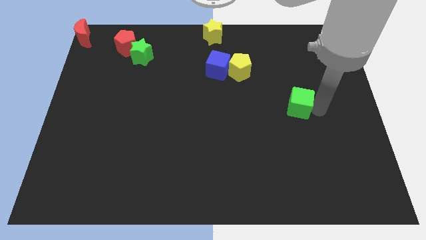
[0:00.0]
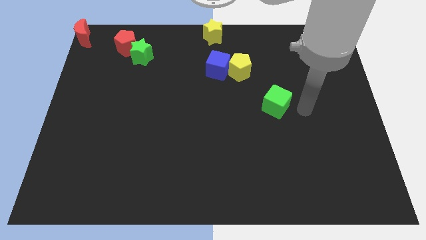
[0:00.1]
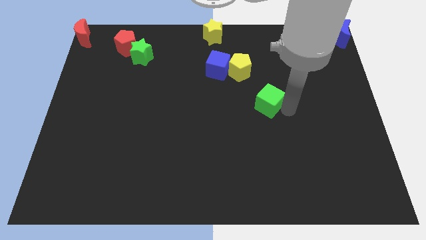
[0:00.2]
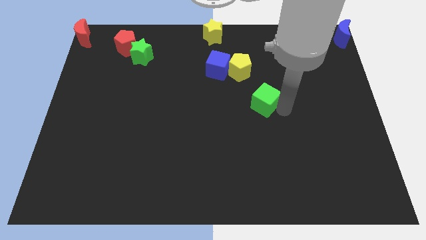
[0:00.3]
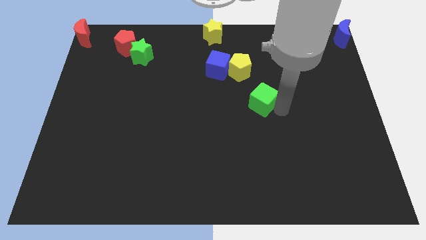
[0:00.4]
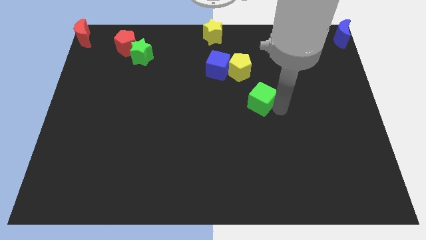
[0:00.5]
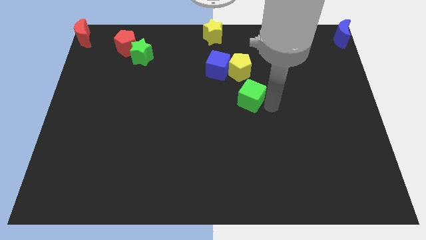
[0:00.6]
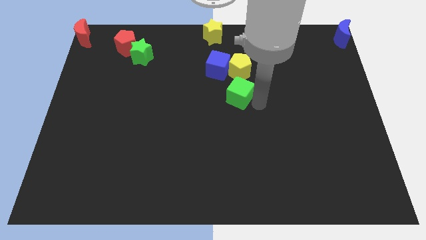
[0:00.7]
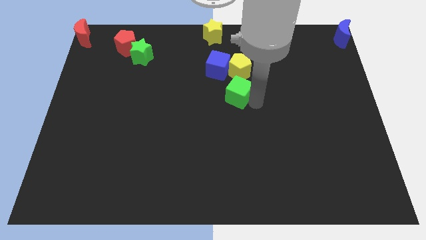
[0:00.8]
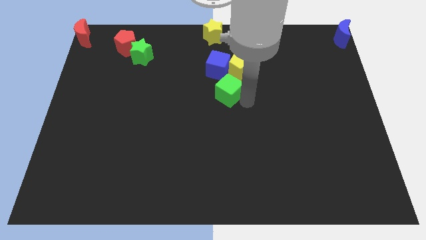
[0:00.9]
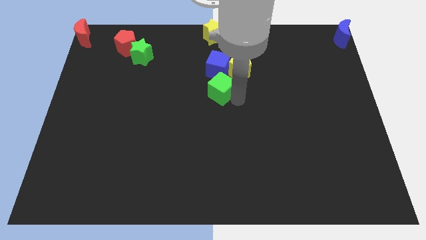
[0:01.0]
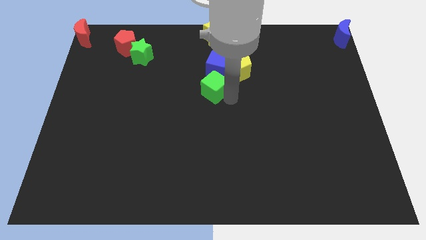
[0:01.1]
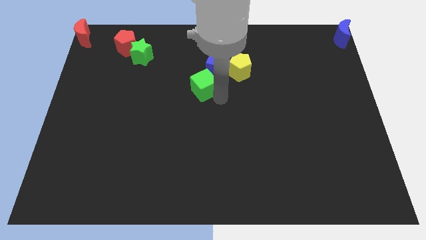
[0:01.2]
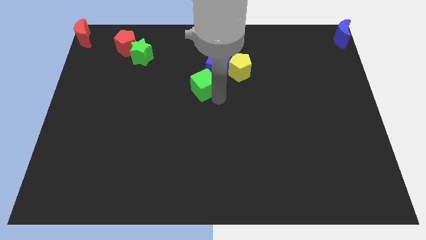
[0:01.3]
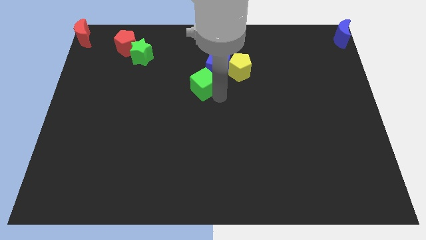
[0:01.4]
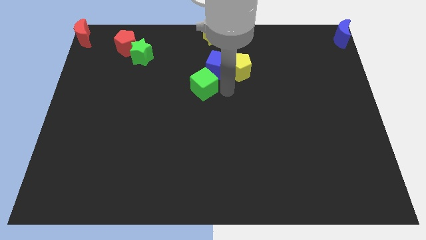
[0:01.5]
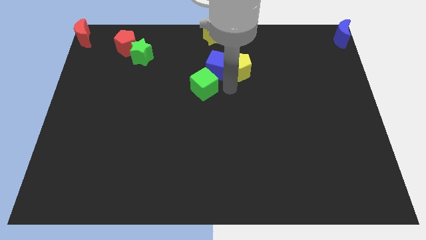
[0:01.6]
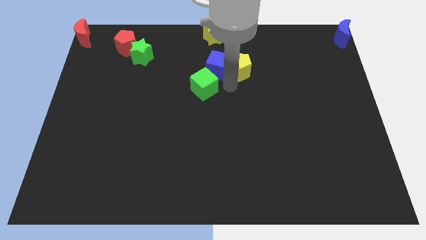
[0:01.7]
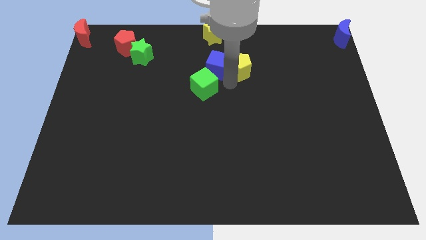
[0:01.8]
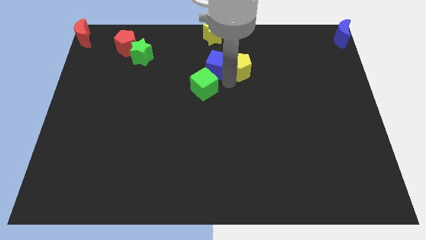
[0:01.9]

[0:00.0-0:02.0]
push the green cube to the bottom of the blue cube

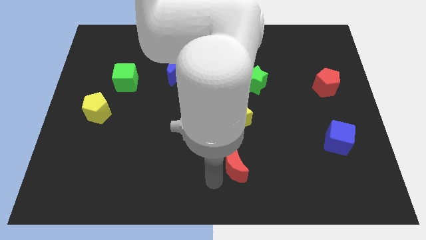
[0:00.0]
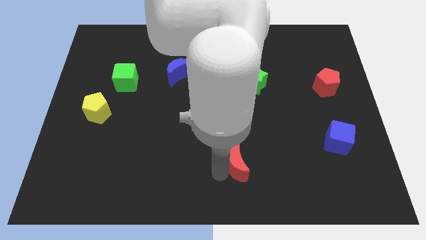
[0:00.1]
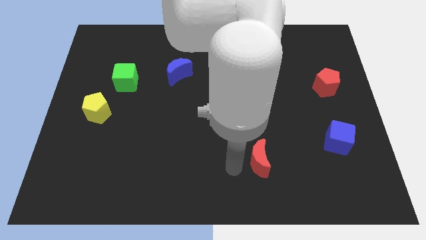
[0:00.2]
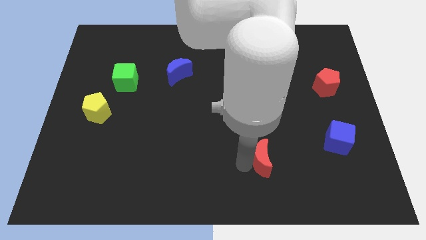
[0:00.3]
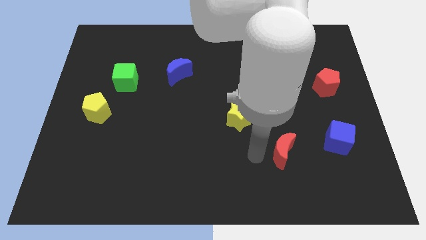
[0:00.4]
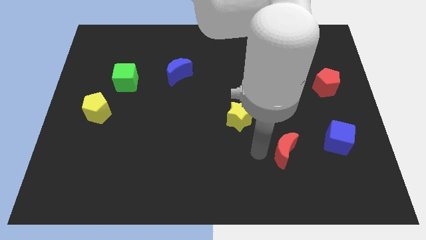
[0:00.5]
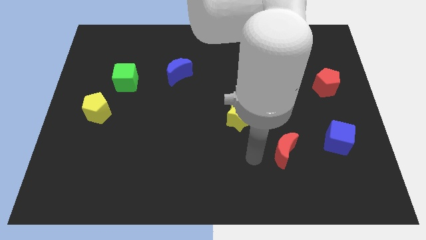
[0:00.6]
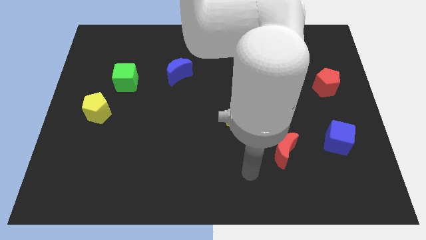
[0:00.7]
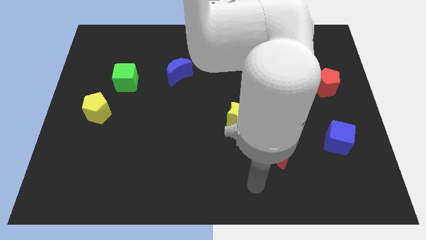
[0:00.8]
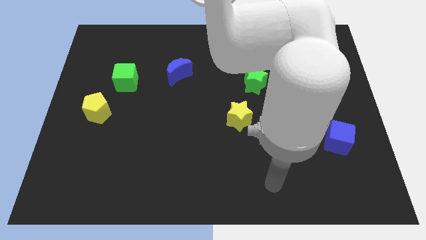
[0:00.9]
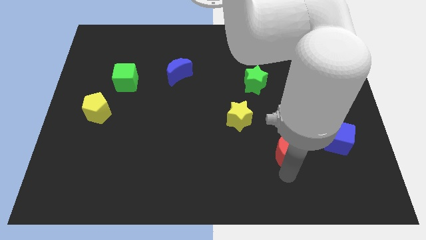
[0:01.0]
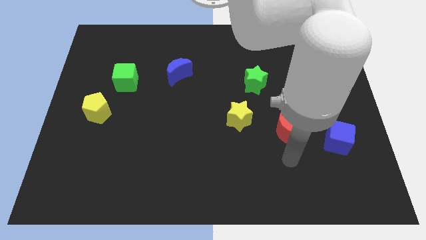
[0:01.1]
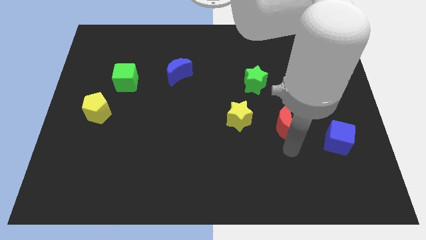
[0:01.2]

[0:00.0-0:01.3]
place the red moon in between blue cube and yellow star

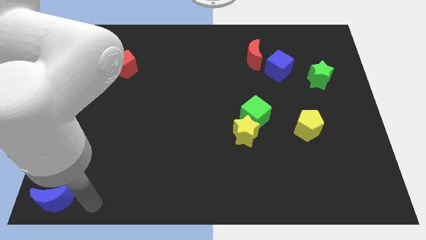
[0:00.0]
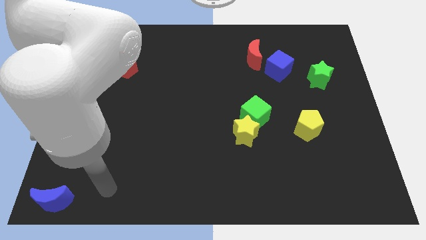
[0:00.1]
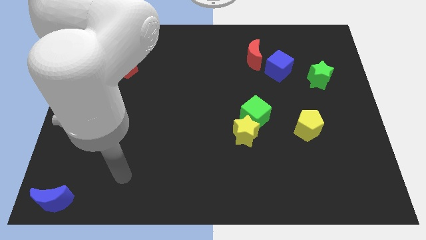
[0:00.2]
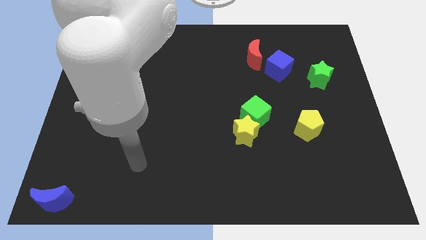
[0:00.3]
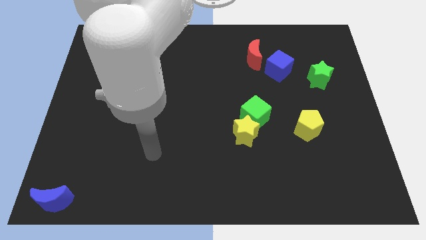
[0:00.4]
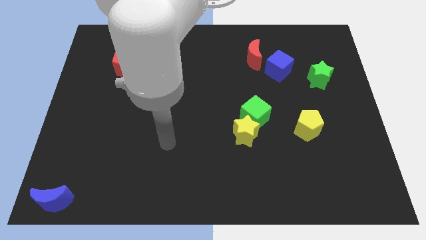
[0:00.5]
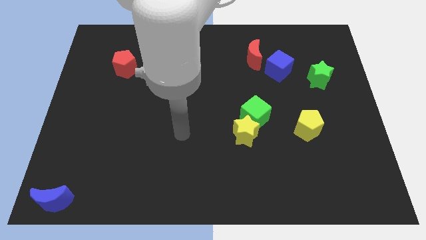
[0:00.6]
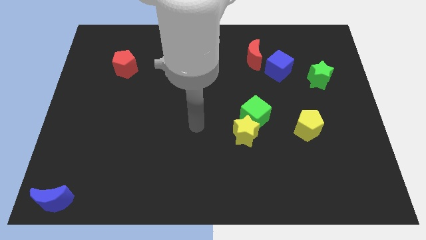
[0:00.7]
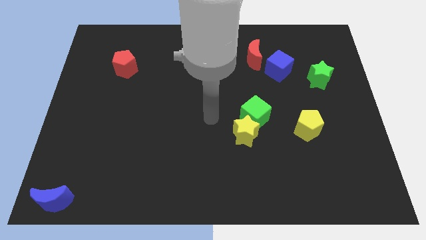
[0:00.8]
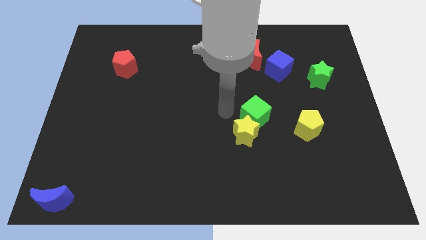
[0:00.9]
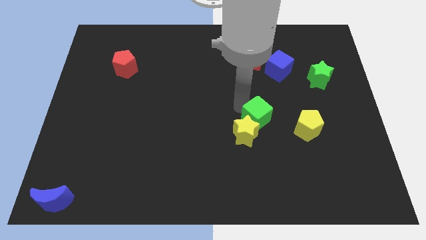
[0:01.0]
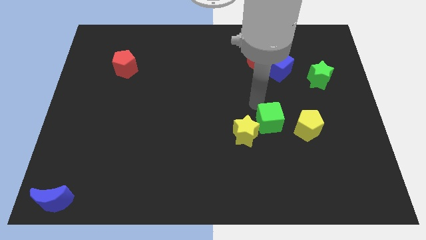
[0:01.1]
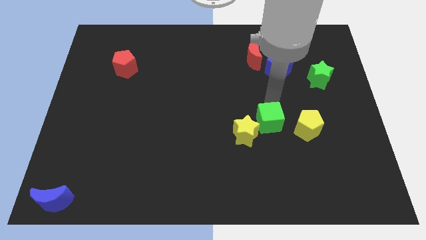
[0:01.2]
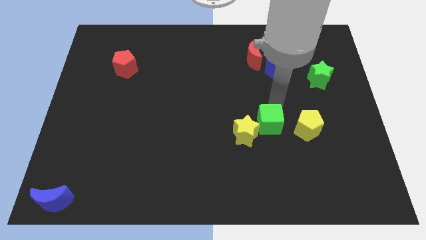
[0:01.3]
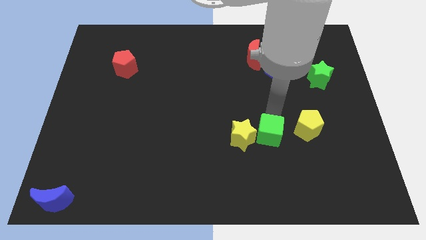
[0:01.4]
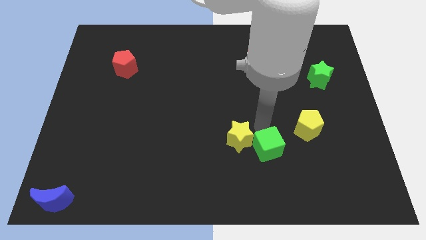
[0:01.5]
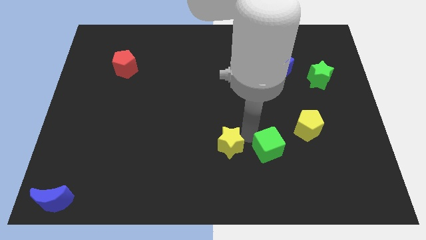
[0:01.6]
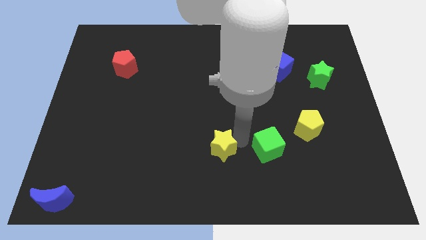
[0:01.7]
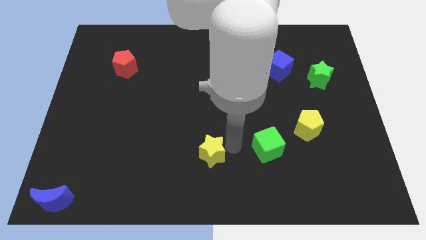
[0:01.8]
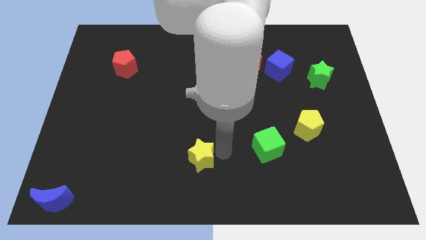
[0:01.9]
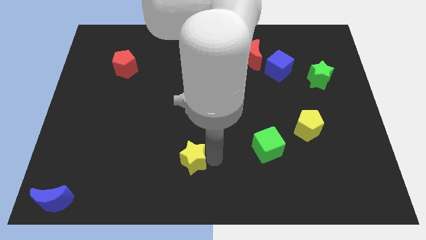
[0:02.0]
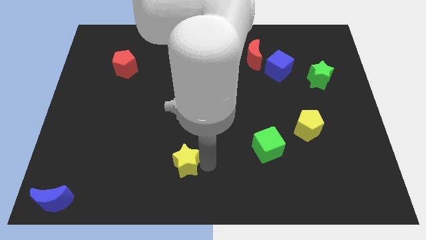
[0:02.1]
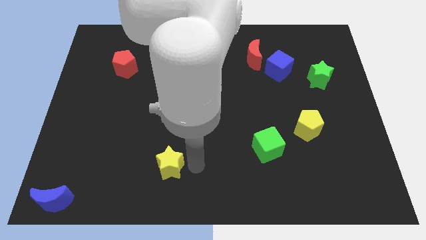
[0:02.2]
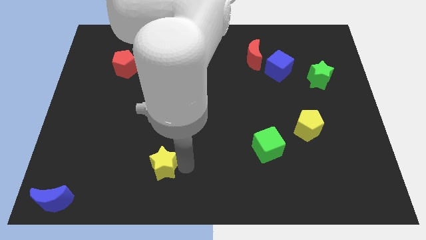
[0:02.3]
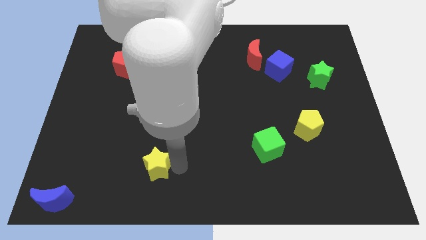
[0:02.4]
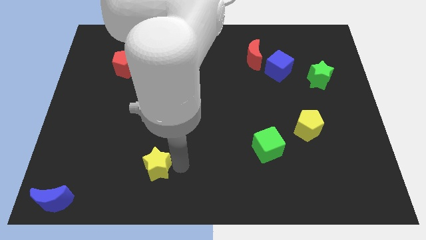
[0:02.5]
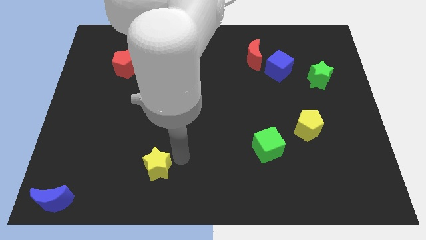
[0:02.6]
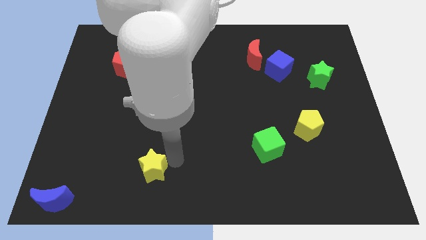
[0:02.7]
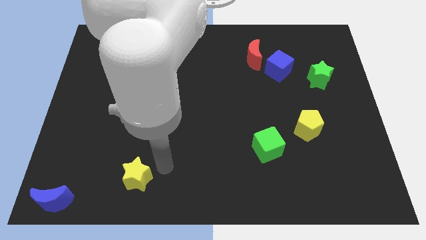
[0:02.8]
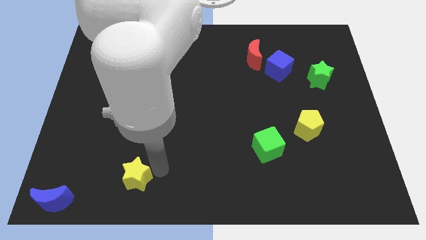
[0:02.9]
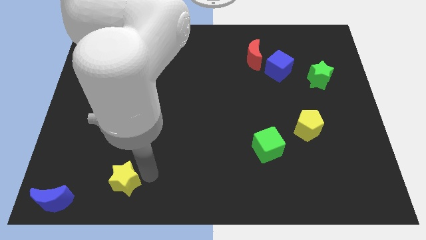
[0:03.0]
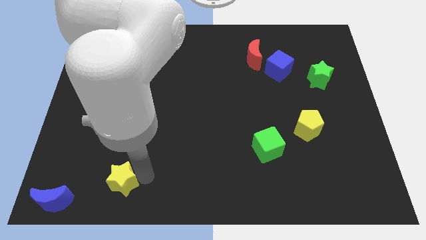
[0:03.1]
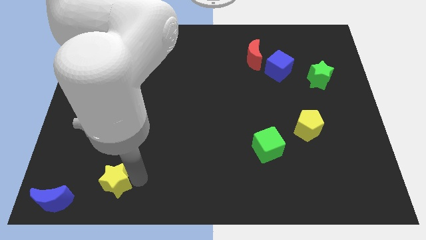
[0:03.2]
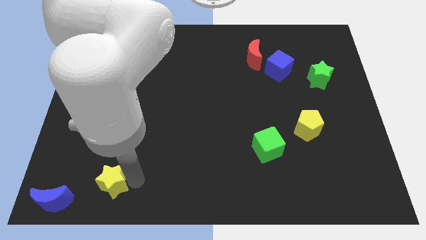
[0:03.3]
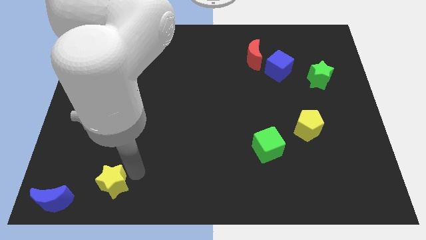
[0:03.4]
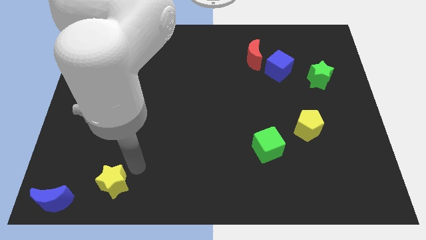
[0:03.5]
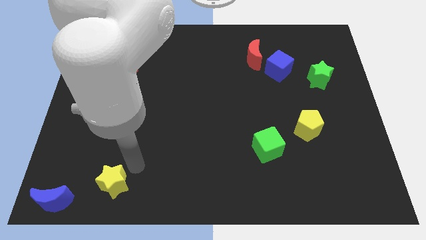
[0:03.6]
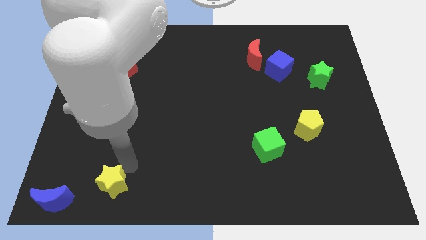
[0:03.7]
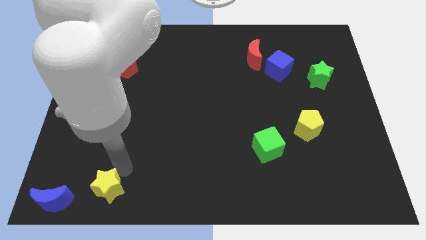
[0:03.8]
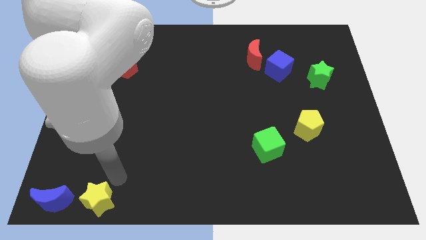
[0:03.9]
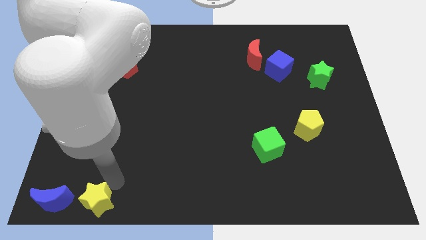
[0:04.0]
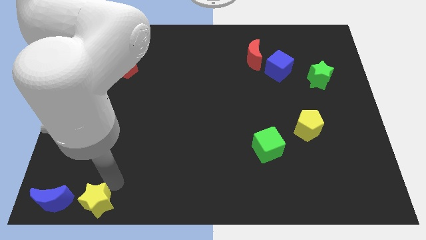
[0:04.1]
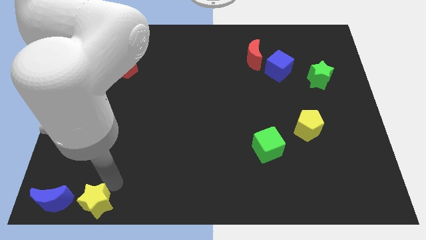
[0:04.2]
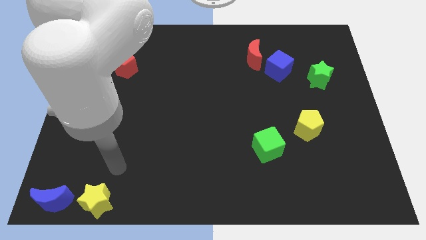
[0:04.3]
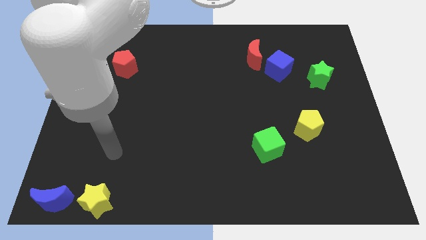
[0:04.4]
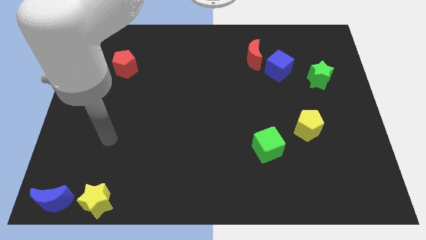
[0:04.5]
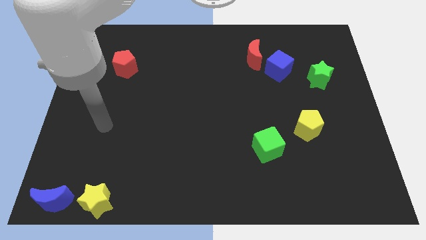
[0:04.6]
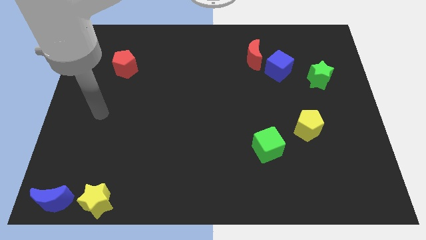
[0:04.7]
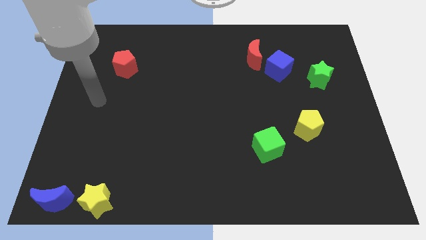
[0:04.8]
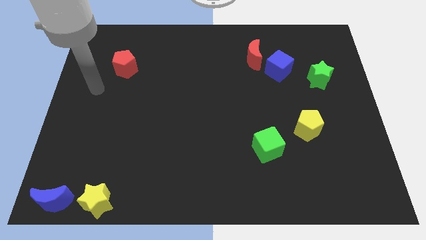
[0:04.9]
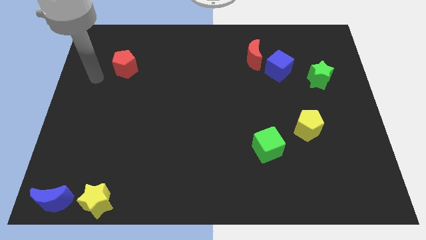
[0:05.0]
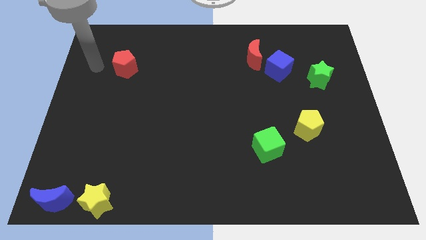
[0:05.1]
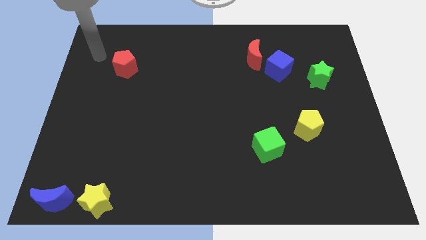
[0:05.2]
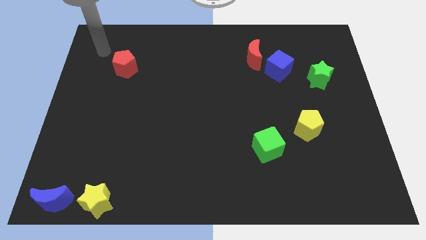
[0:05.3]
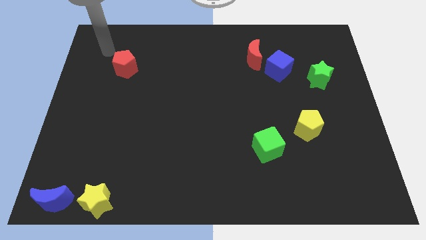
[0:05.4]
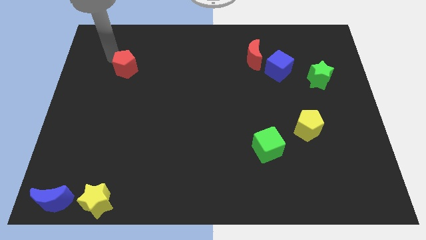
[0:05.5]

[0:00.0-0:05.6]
move the yellow star away from the green cube
